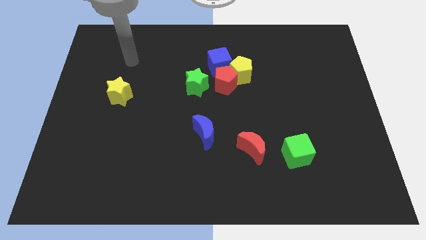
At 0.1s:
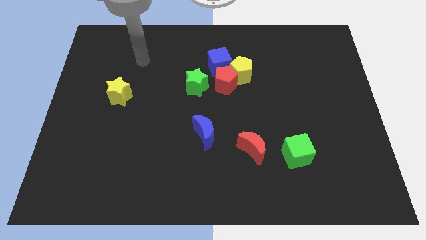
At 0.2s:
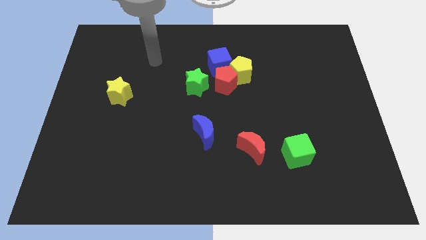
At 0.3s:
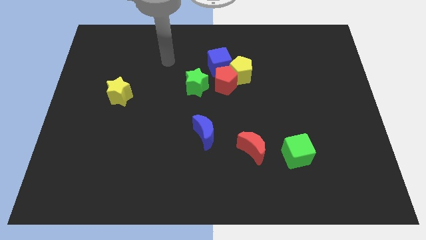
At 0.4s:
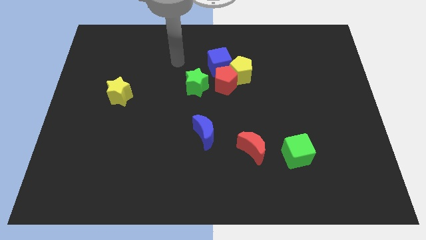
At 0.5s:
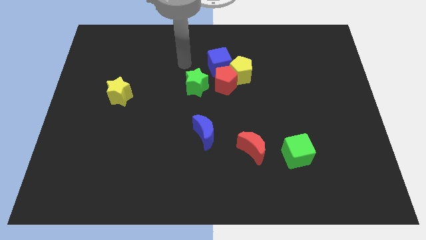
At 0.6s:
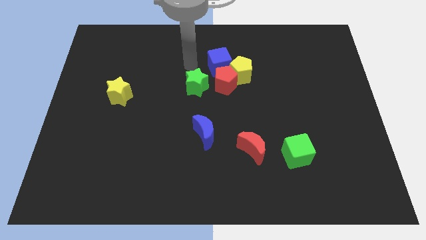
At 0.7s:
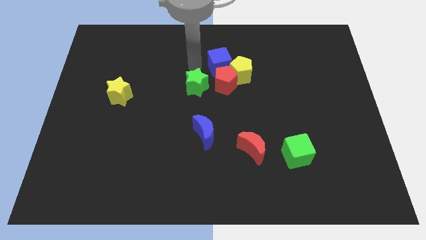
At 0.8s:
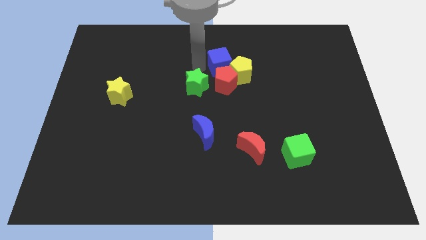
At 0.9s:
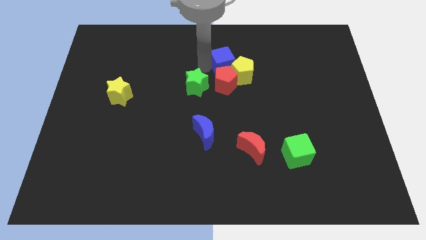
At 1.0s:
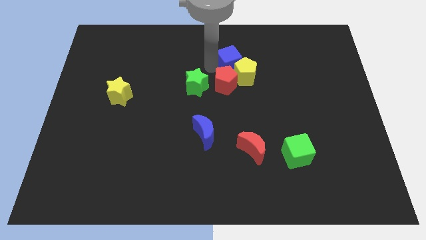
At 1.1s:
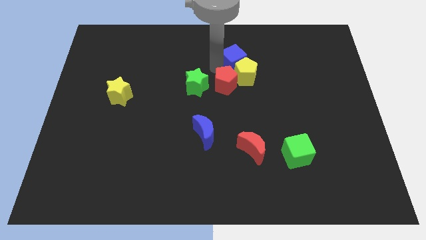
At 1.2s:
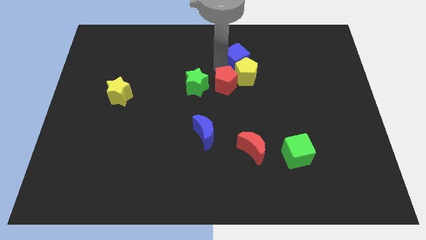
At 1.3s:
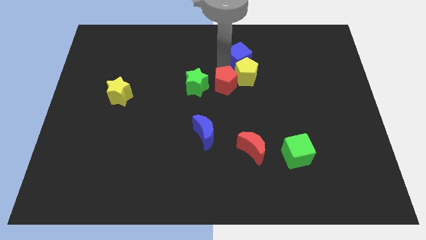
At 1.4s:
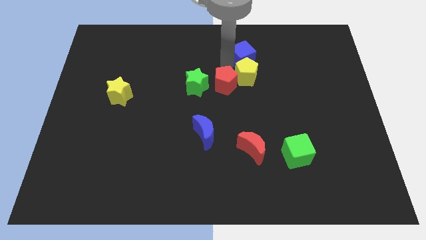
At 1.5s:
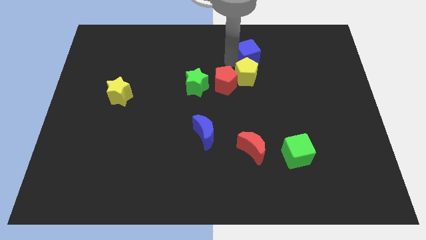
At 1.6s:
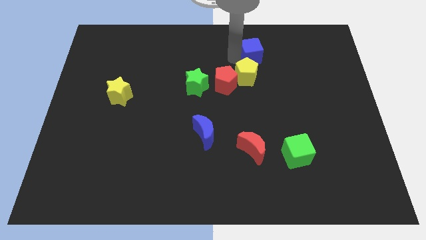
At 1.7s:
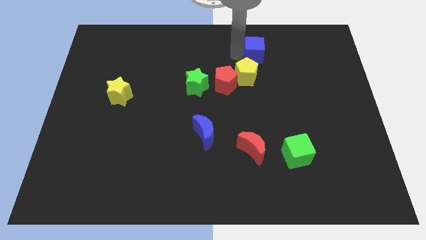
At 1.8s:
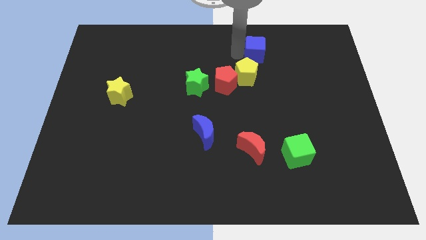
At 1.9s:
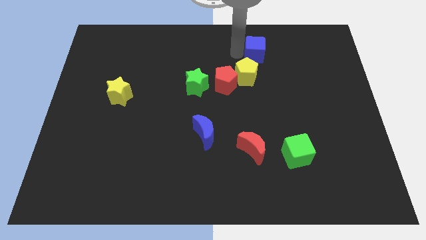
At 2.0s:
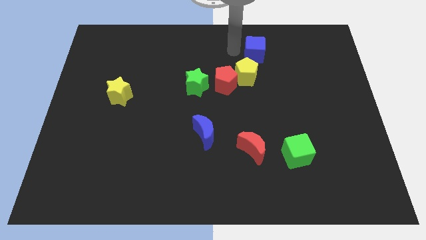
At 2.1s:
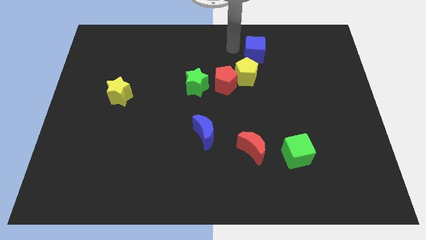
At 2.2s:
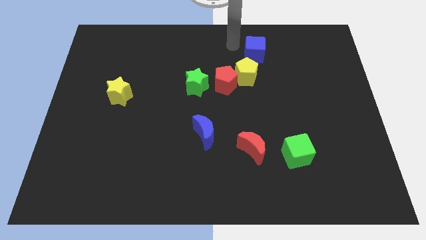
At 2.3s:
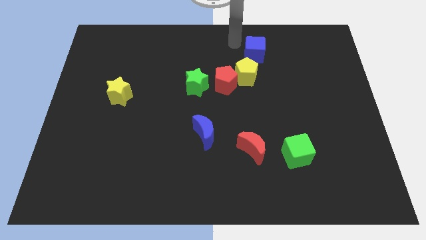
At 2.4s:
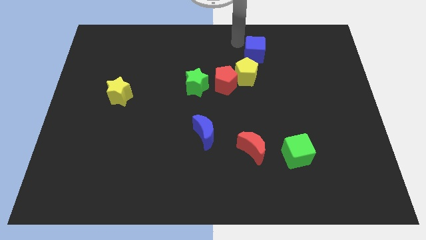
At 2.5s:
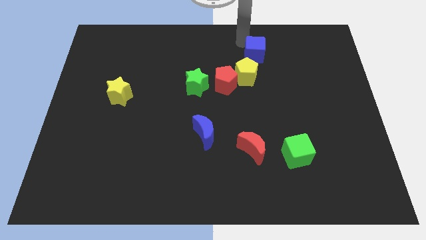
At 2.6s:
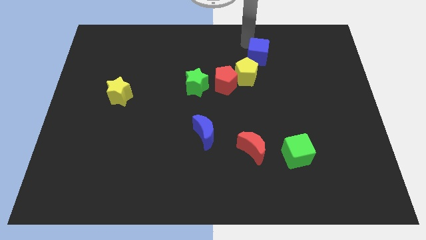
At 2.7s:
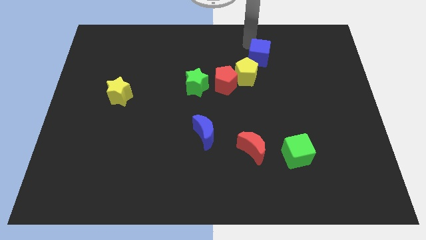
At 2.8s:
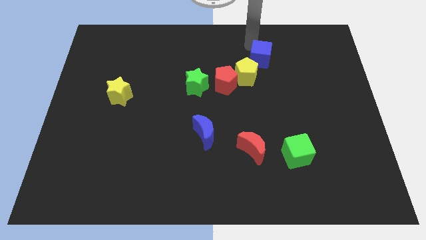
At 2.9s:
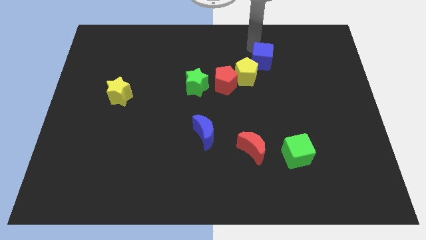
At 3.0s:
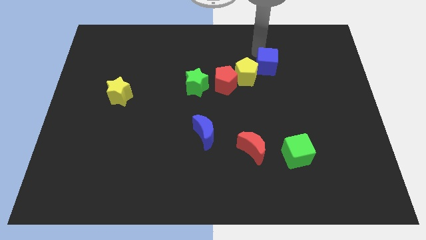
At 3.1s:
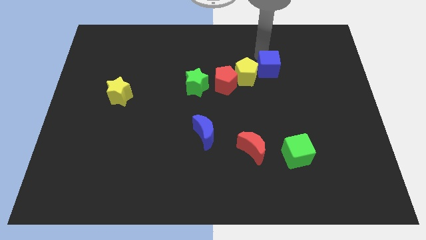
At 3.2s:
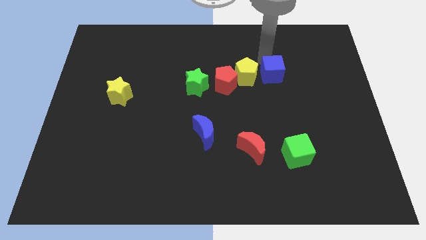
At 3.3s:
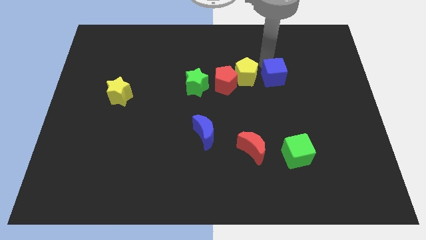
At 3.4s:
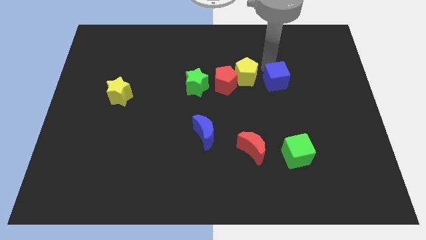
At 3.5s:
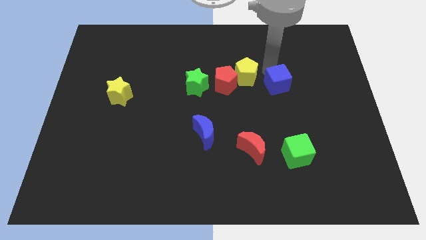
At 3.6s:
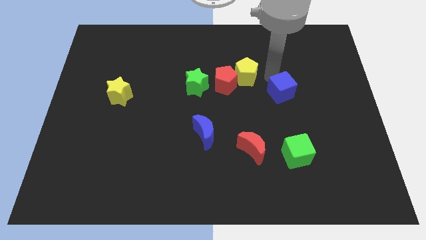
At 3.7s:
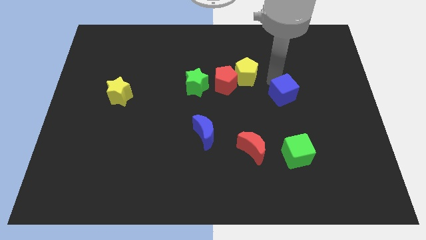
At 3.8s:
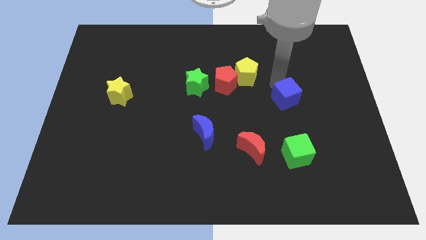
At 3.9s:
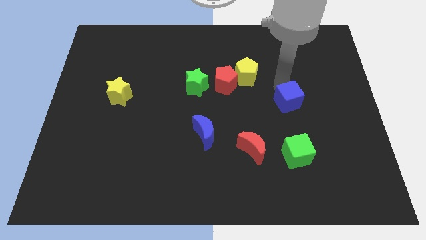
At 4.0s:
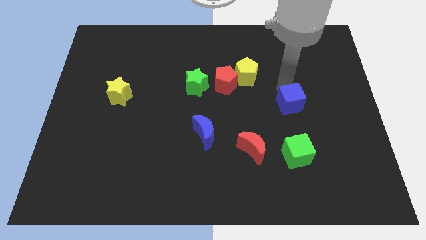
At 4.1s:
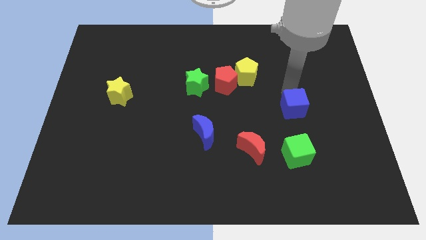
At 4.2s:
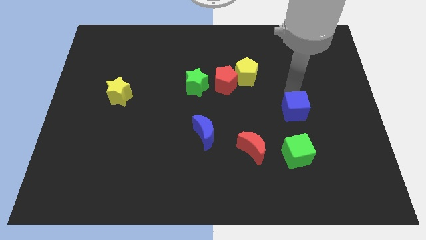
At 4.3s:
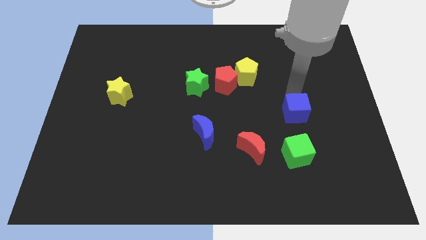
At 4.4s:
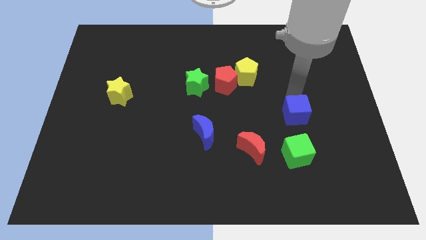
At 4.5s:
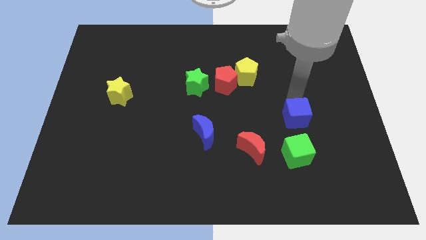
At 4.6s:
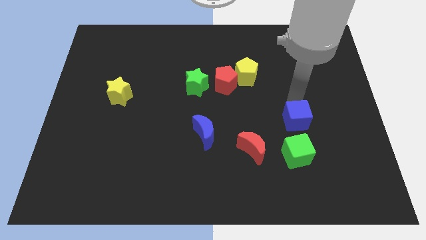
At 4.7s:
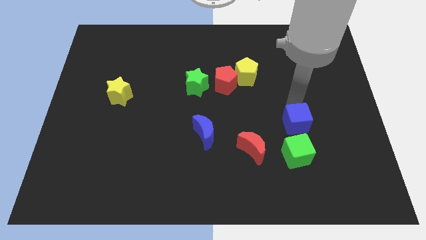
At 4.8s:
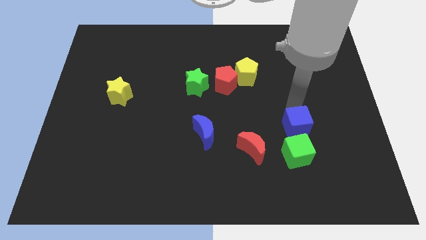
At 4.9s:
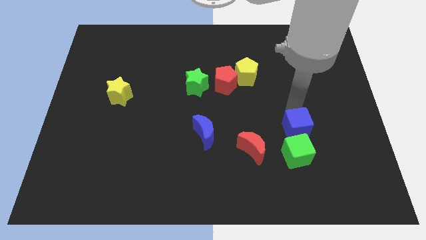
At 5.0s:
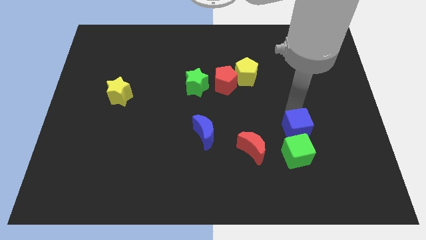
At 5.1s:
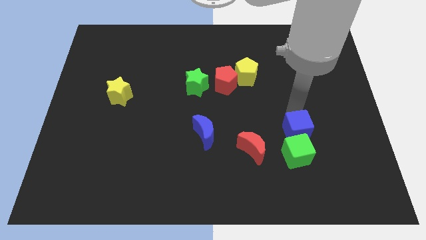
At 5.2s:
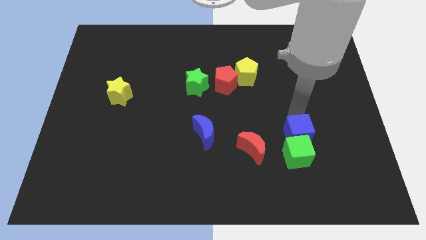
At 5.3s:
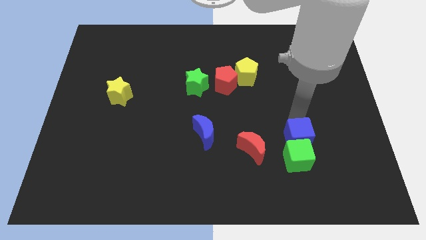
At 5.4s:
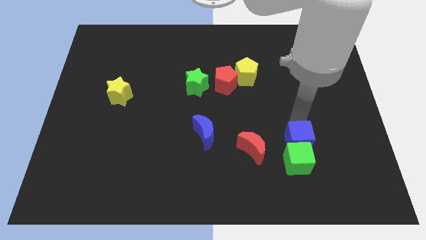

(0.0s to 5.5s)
move the blue cube towards the green cube

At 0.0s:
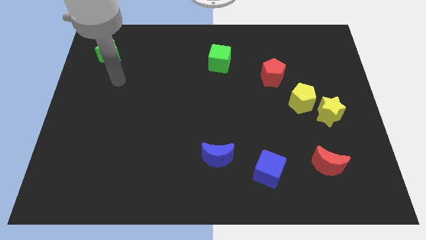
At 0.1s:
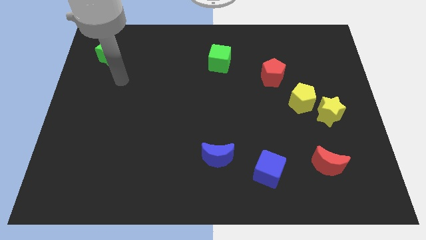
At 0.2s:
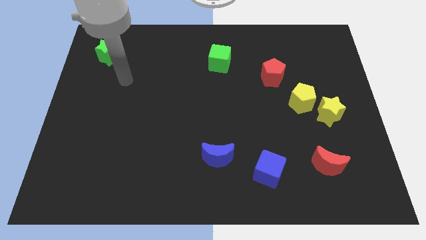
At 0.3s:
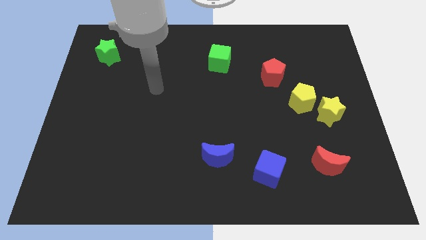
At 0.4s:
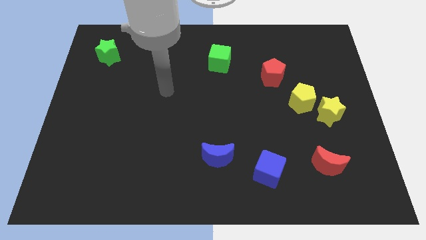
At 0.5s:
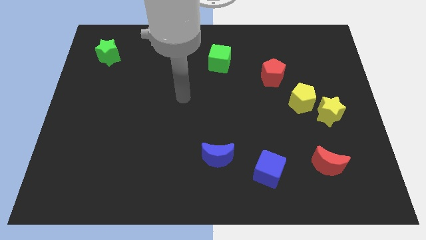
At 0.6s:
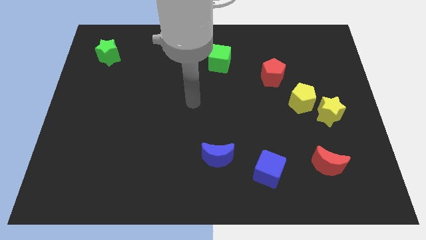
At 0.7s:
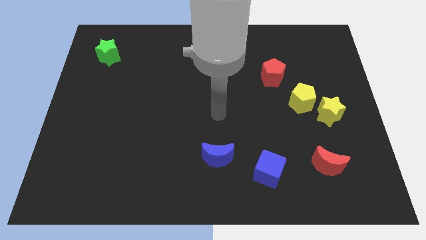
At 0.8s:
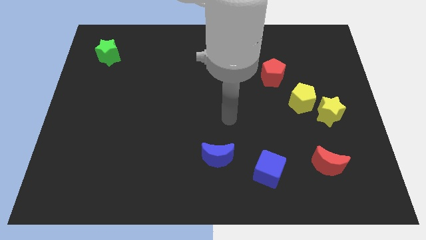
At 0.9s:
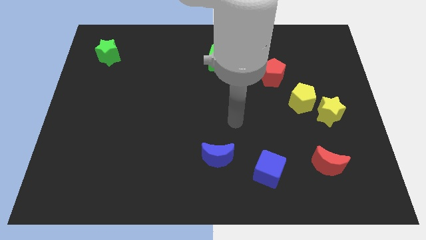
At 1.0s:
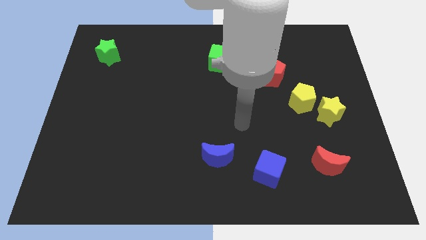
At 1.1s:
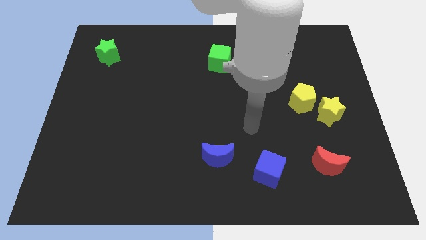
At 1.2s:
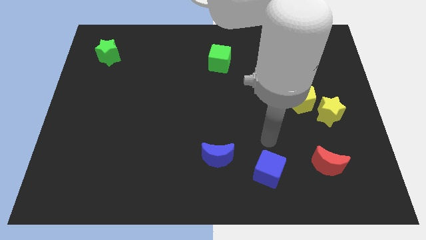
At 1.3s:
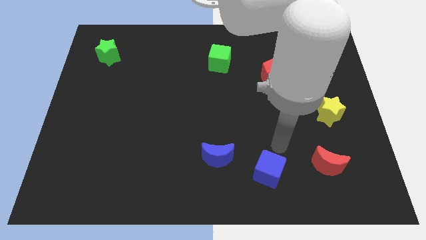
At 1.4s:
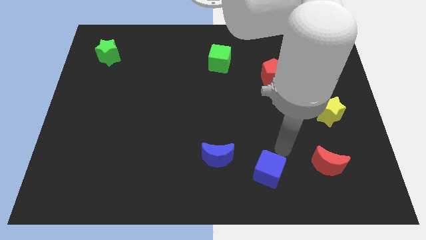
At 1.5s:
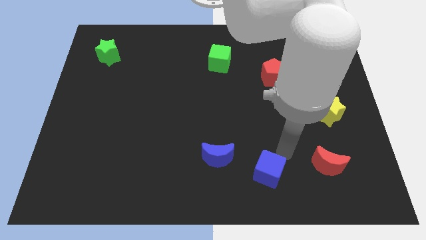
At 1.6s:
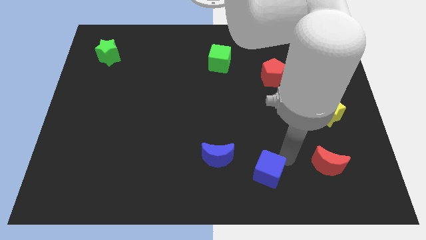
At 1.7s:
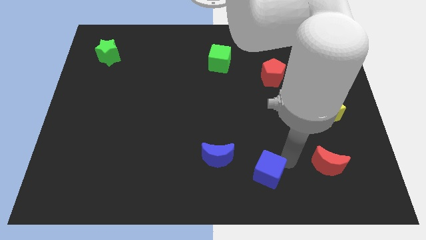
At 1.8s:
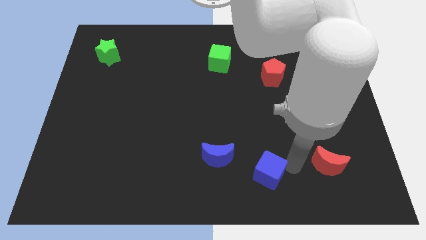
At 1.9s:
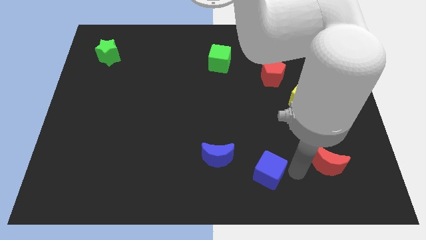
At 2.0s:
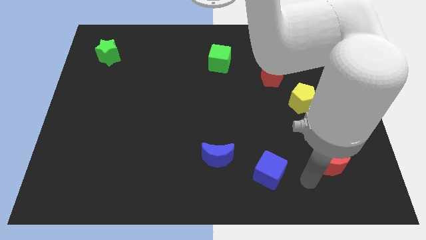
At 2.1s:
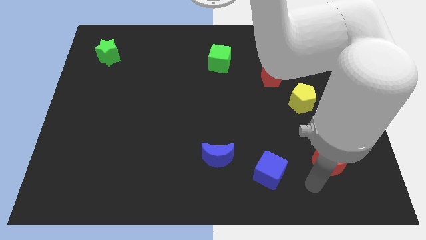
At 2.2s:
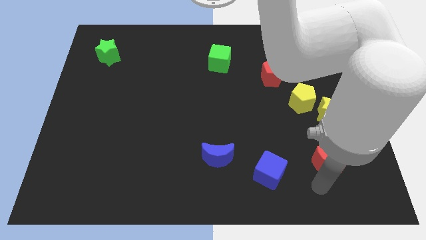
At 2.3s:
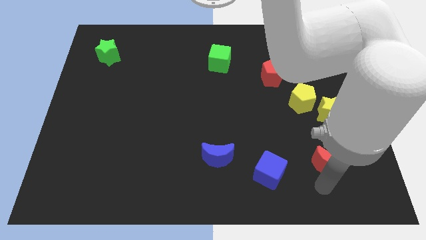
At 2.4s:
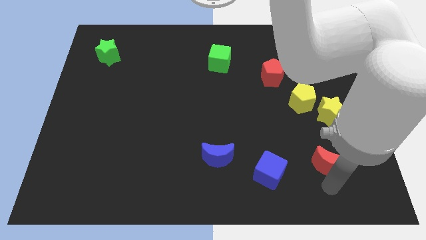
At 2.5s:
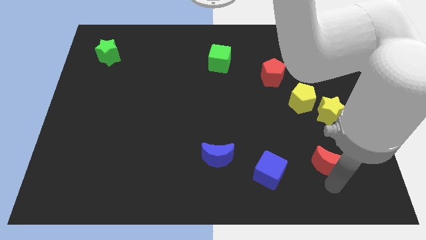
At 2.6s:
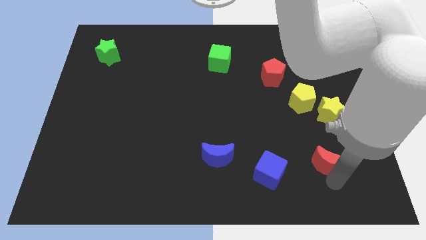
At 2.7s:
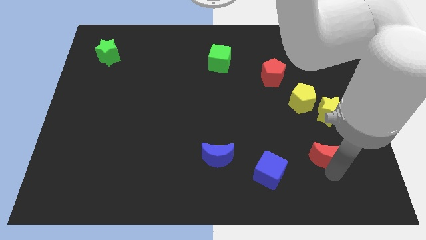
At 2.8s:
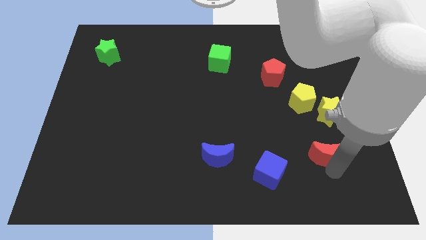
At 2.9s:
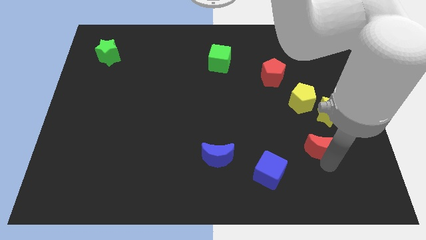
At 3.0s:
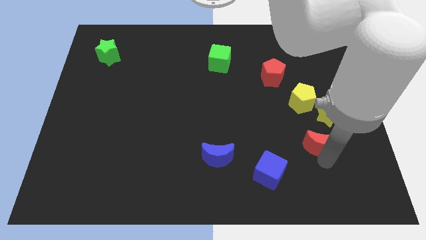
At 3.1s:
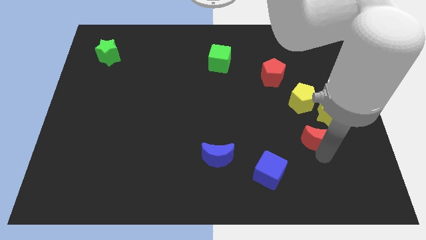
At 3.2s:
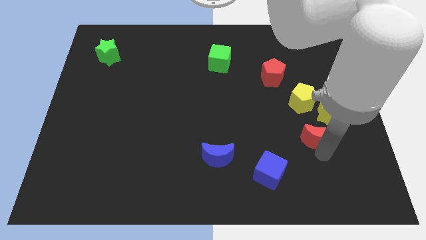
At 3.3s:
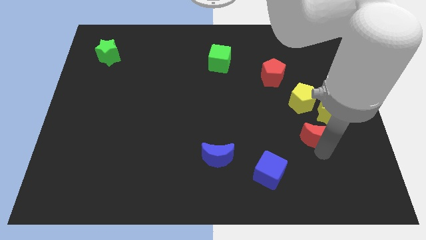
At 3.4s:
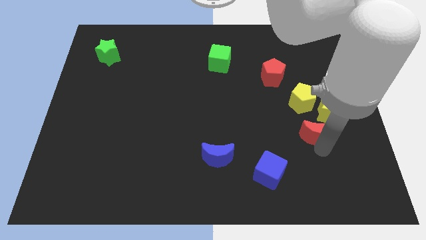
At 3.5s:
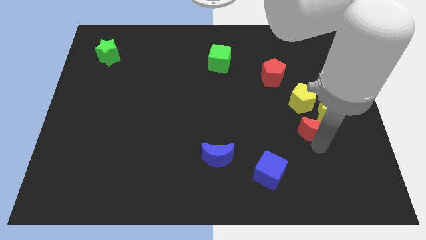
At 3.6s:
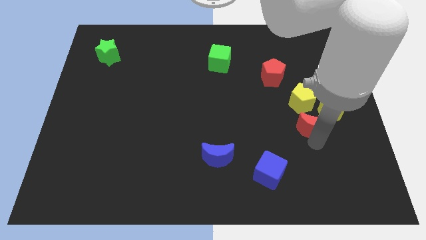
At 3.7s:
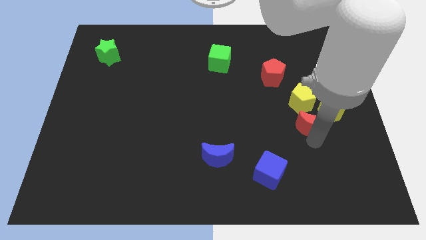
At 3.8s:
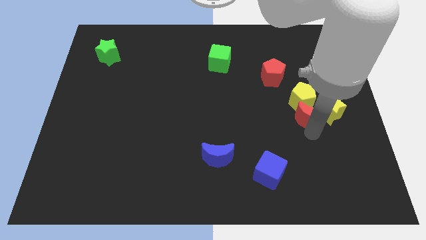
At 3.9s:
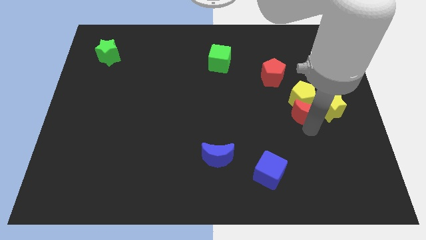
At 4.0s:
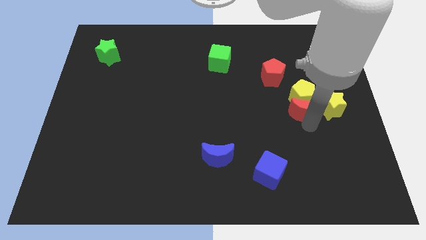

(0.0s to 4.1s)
push the red moon to the yellow pentagon
